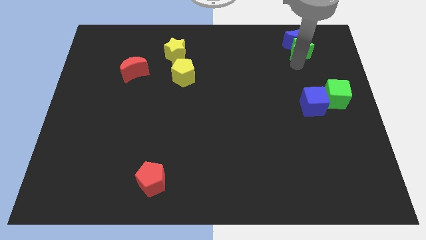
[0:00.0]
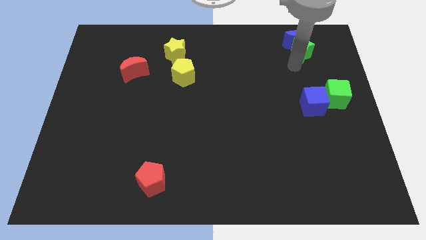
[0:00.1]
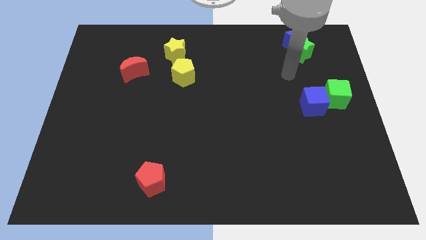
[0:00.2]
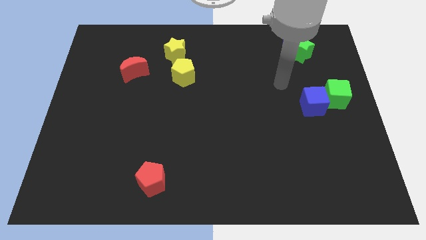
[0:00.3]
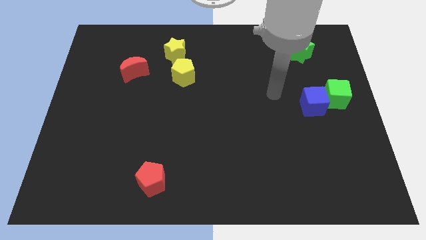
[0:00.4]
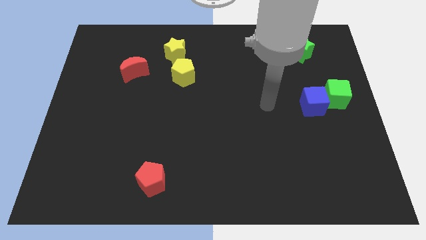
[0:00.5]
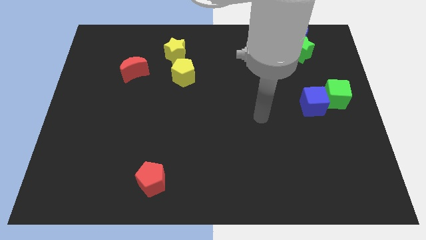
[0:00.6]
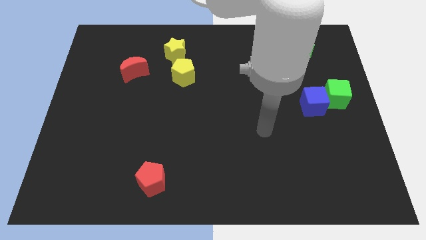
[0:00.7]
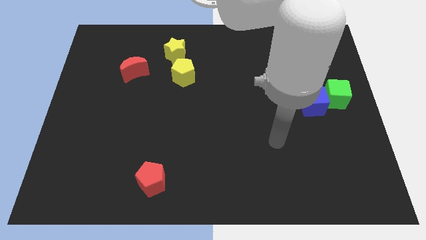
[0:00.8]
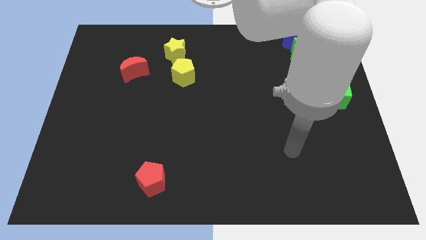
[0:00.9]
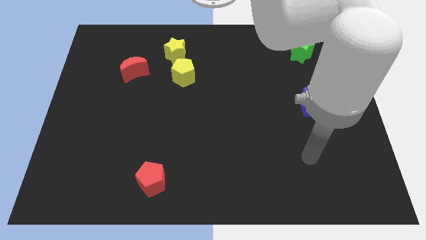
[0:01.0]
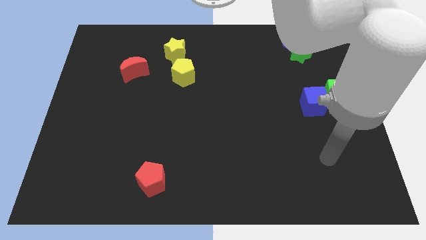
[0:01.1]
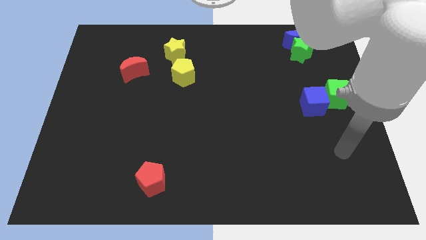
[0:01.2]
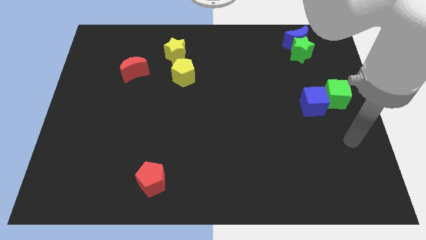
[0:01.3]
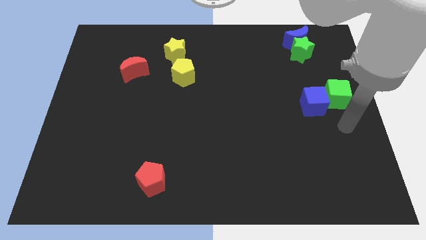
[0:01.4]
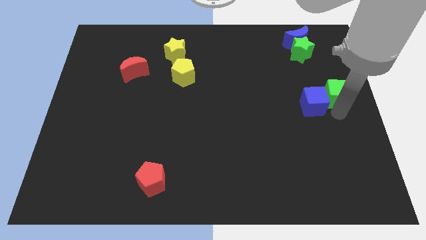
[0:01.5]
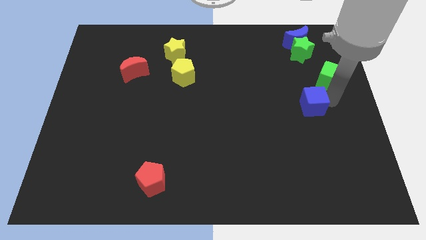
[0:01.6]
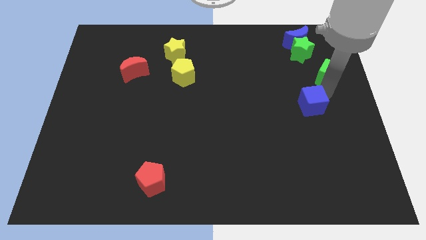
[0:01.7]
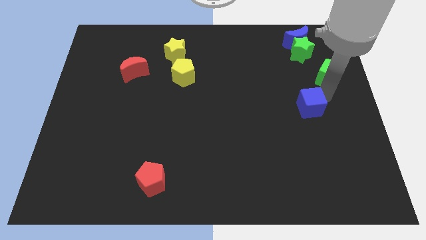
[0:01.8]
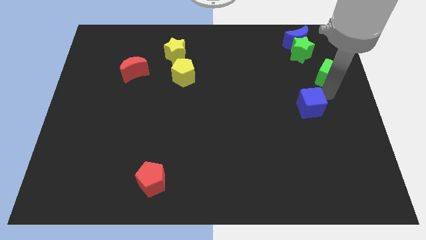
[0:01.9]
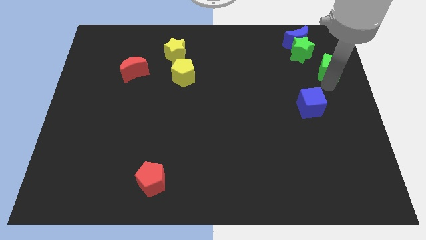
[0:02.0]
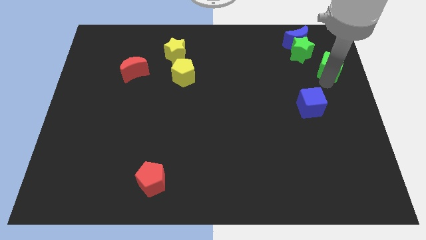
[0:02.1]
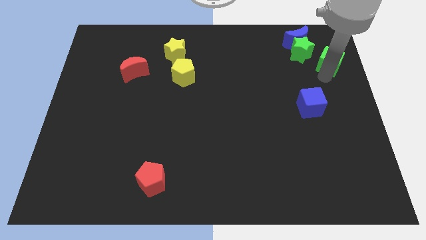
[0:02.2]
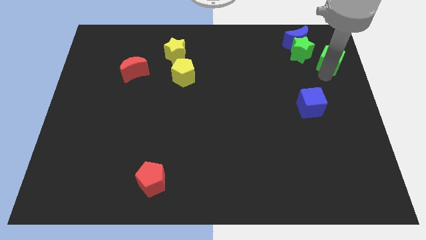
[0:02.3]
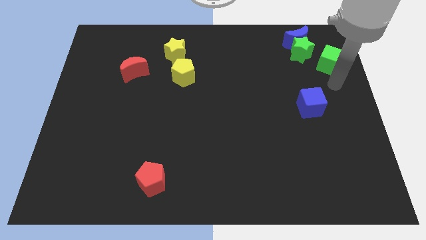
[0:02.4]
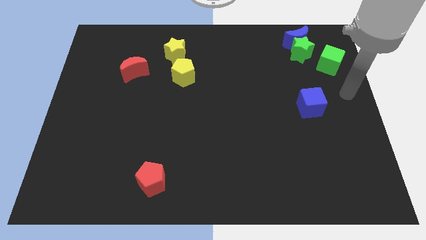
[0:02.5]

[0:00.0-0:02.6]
push the green cube to the right of the green star

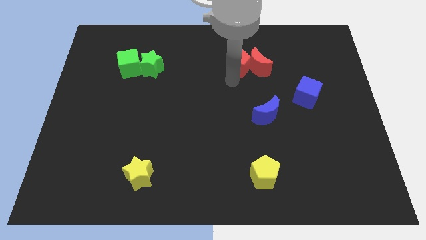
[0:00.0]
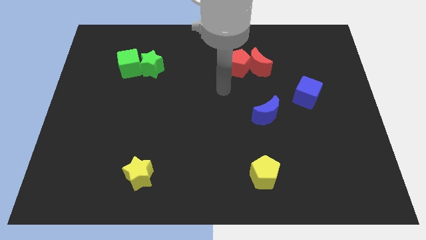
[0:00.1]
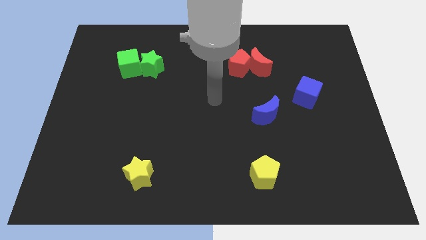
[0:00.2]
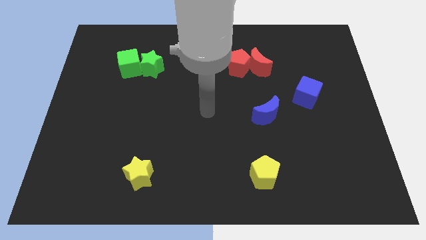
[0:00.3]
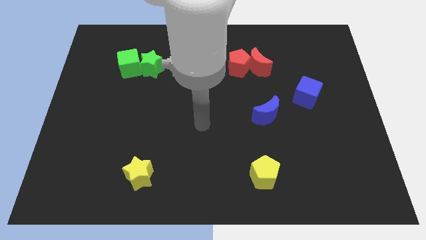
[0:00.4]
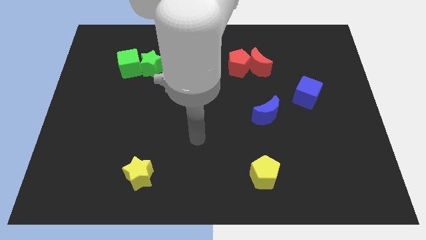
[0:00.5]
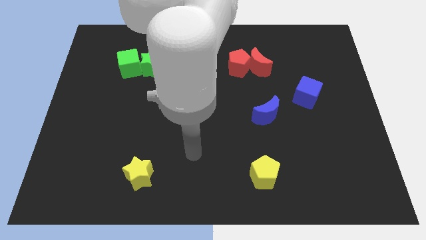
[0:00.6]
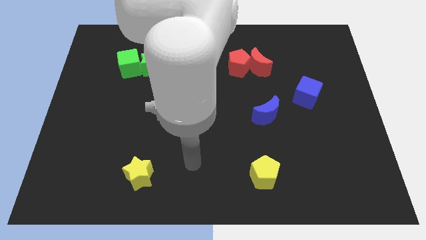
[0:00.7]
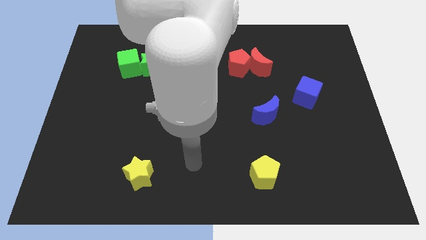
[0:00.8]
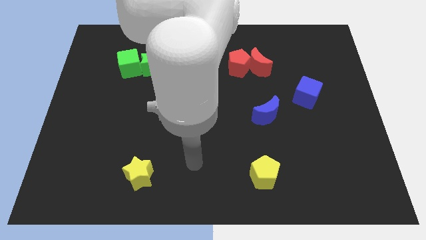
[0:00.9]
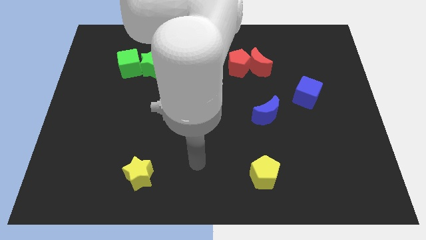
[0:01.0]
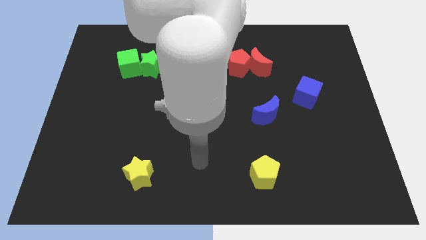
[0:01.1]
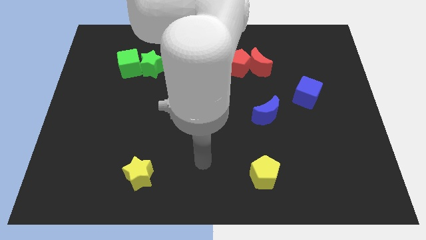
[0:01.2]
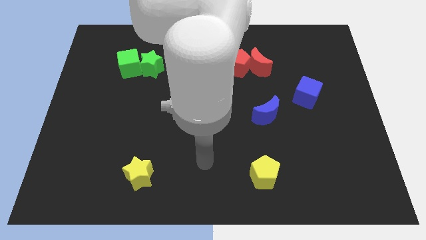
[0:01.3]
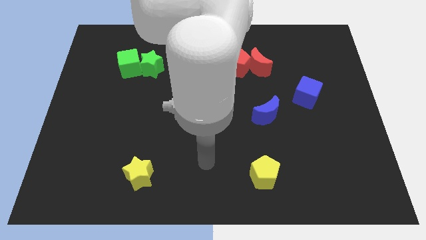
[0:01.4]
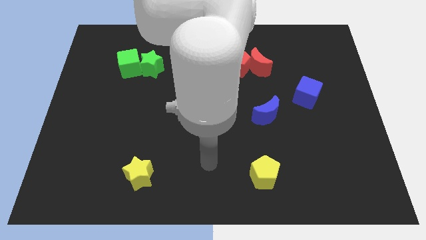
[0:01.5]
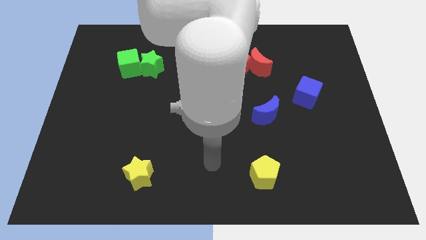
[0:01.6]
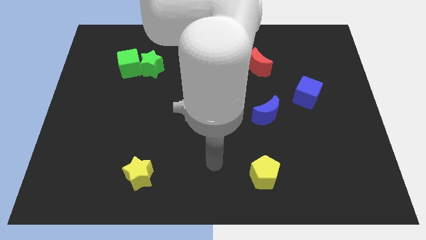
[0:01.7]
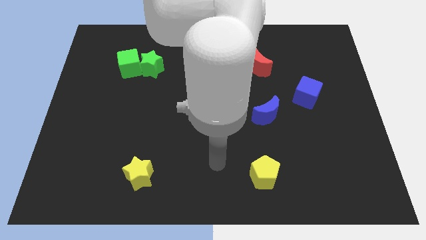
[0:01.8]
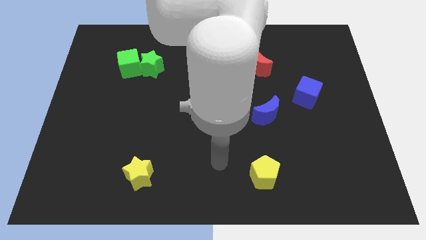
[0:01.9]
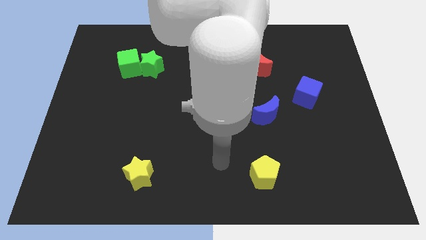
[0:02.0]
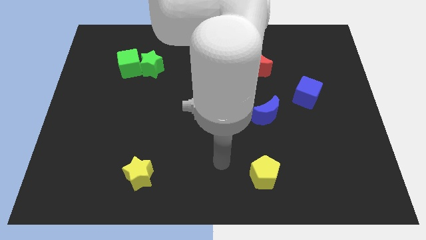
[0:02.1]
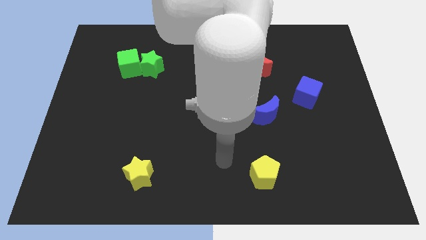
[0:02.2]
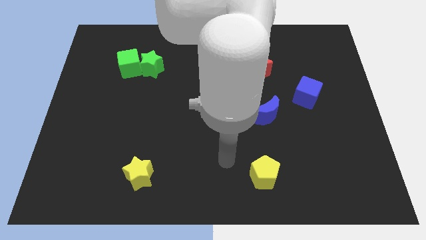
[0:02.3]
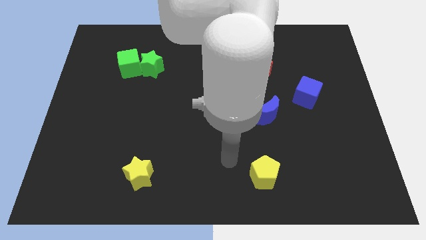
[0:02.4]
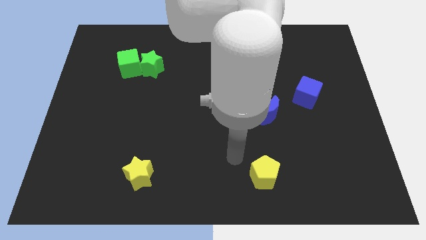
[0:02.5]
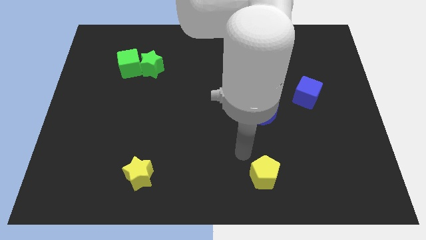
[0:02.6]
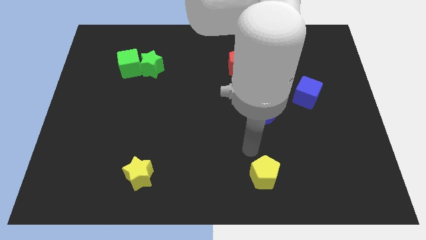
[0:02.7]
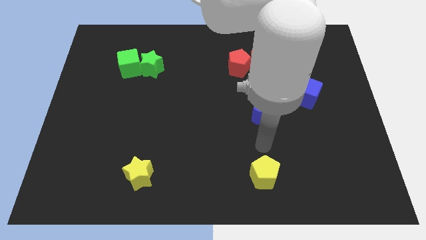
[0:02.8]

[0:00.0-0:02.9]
put your arm above the yellow pentagon

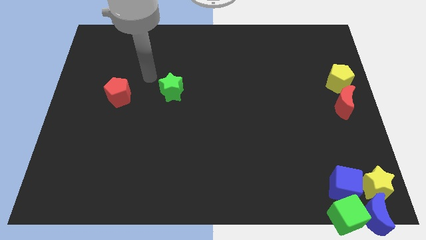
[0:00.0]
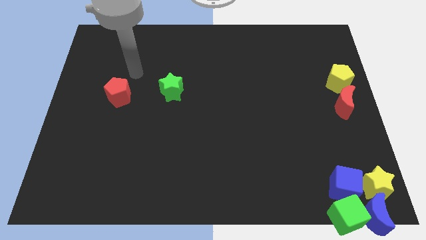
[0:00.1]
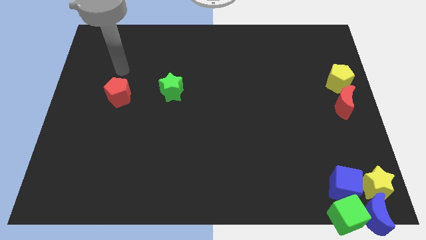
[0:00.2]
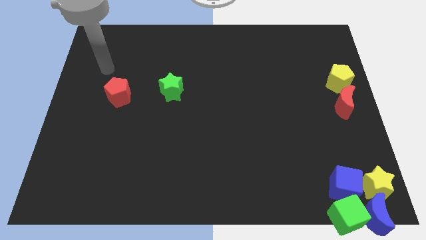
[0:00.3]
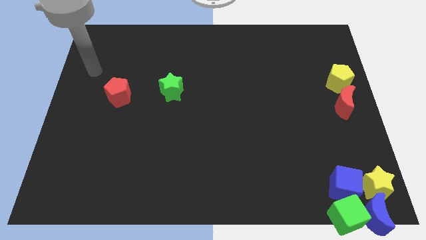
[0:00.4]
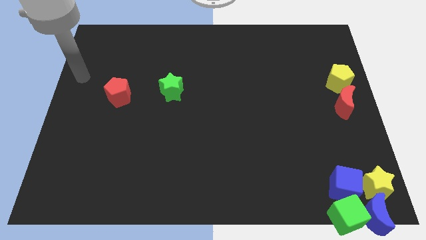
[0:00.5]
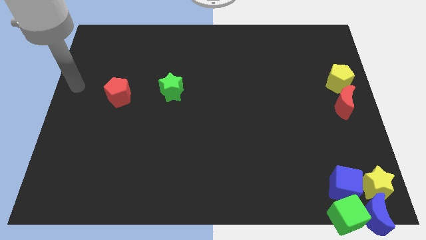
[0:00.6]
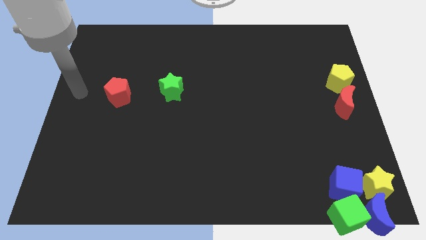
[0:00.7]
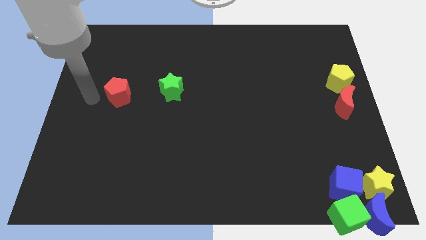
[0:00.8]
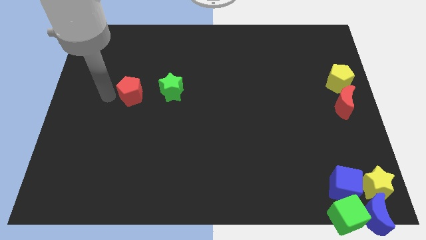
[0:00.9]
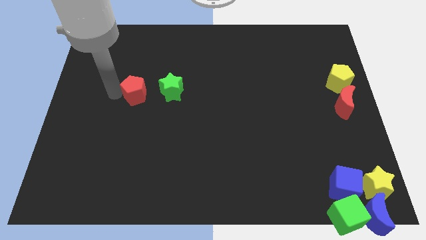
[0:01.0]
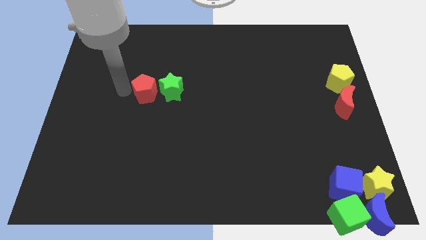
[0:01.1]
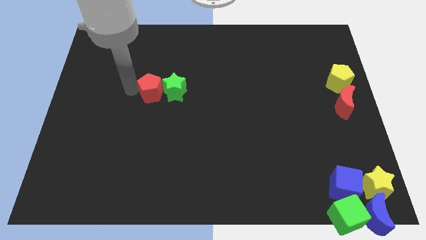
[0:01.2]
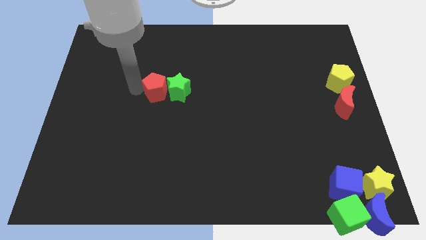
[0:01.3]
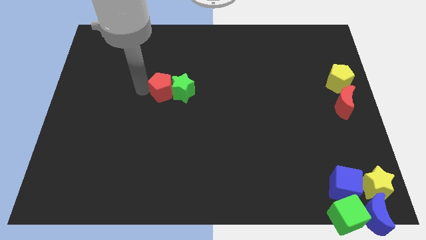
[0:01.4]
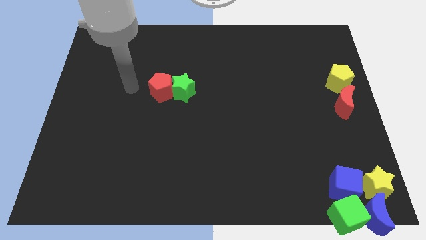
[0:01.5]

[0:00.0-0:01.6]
slide the red pentagon into the green star

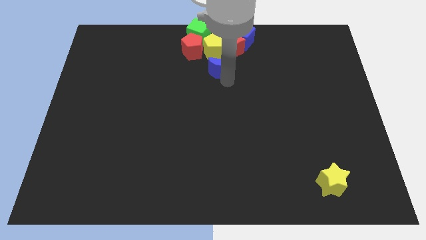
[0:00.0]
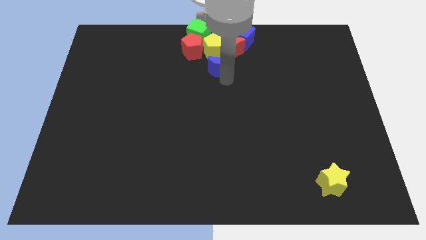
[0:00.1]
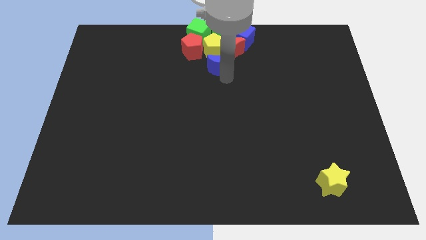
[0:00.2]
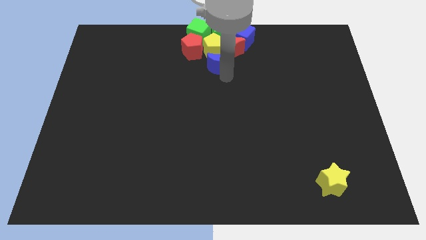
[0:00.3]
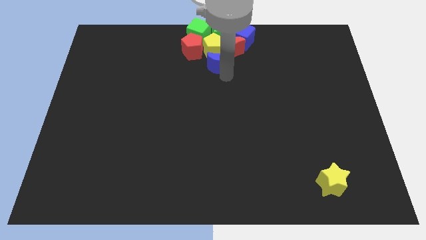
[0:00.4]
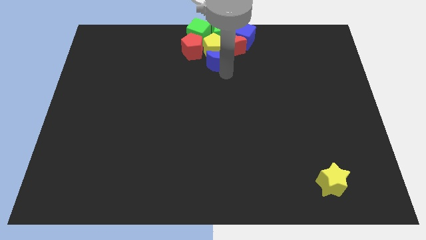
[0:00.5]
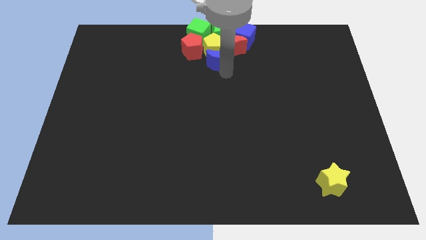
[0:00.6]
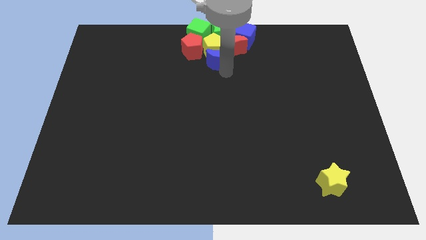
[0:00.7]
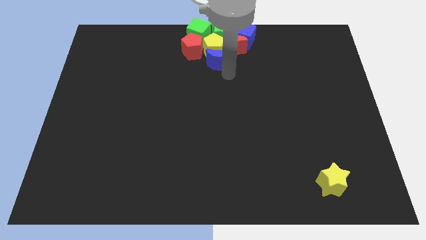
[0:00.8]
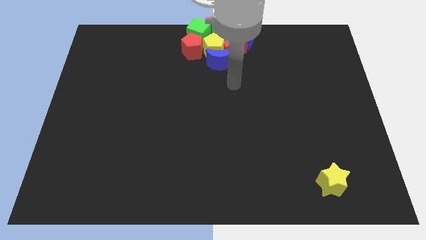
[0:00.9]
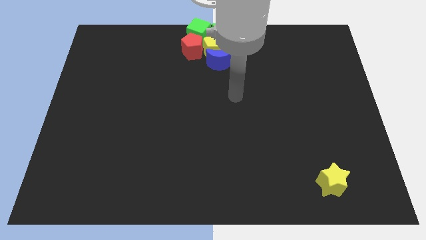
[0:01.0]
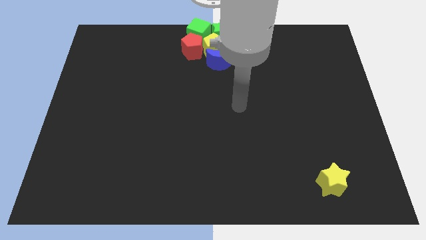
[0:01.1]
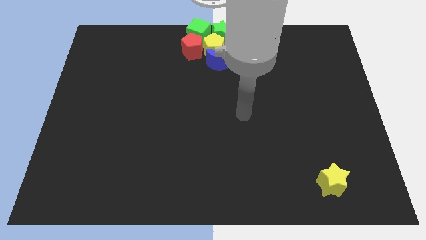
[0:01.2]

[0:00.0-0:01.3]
push the blue crescent below the yellow pentagon

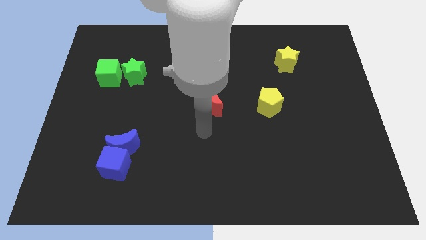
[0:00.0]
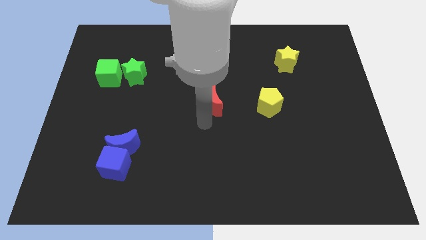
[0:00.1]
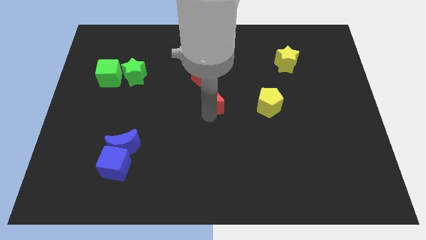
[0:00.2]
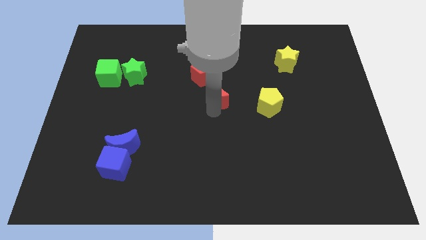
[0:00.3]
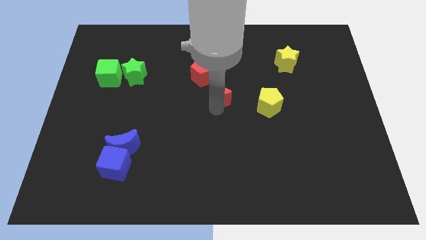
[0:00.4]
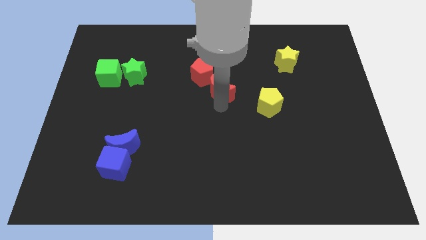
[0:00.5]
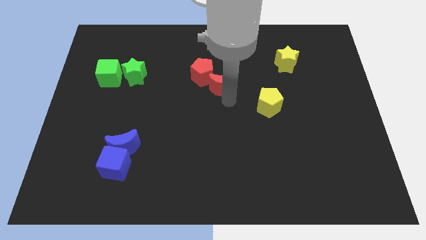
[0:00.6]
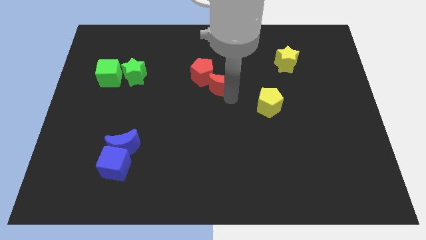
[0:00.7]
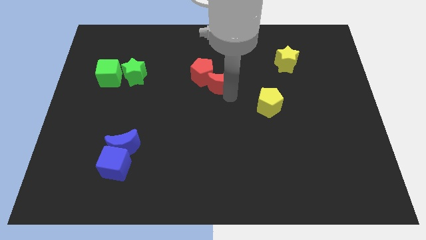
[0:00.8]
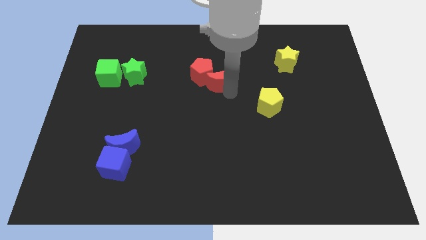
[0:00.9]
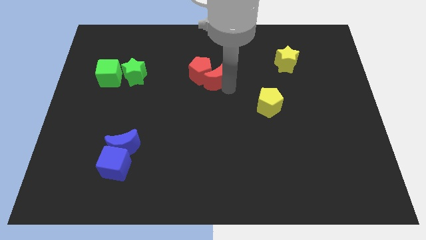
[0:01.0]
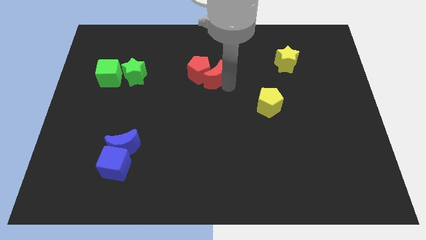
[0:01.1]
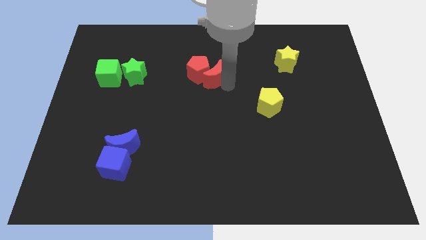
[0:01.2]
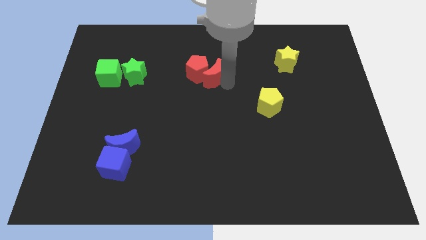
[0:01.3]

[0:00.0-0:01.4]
push red moon into red pentagon
